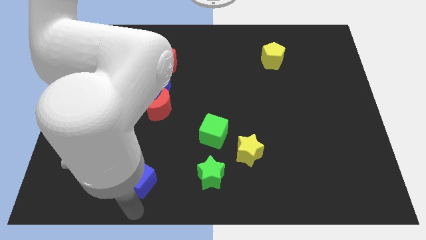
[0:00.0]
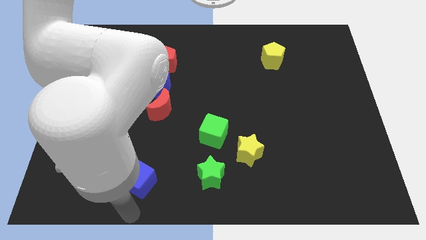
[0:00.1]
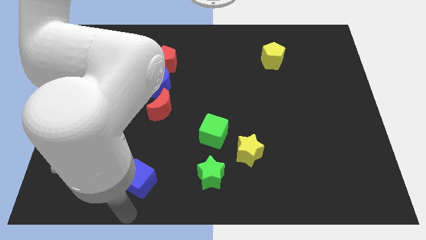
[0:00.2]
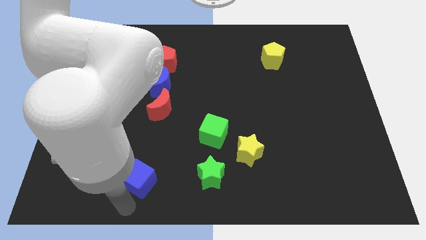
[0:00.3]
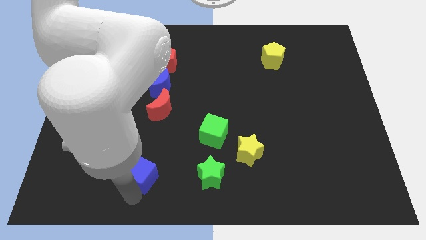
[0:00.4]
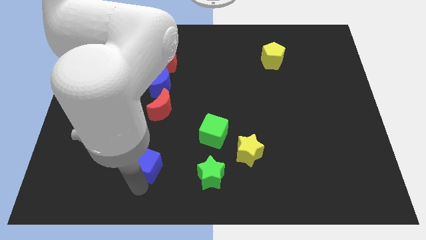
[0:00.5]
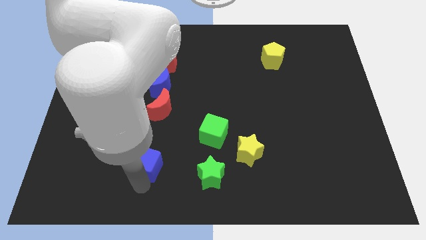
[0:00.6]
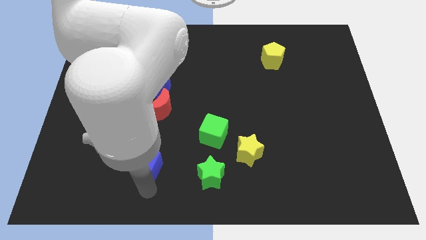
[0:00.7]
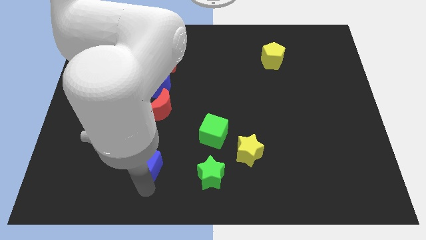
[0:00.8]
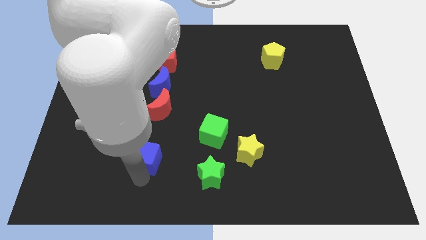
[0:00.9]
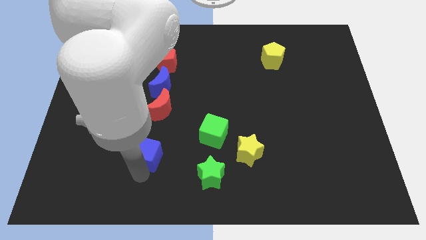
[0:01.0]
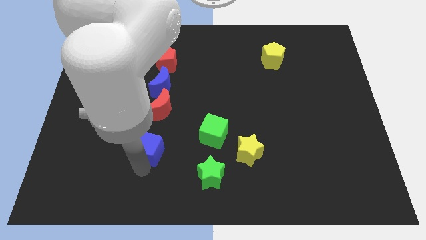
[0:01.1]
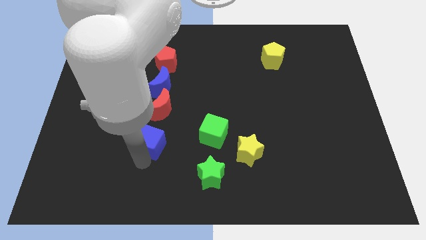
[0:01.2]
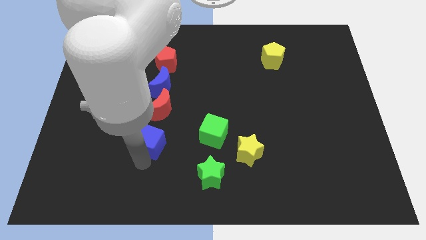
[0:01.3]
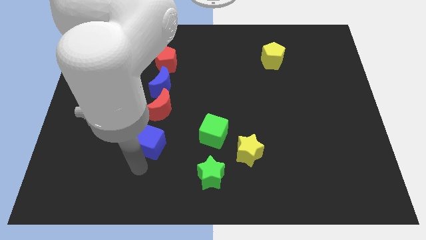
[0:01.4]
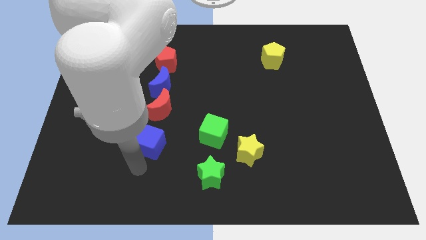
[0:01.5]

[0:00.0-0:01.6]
move the blue cube below the red moon

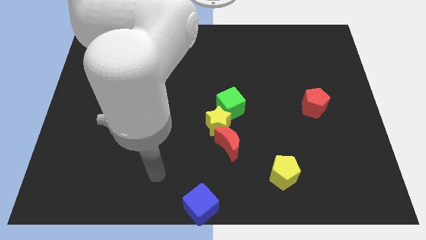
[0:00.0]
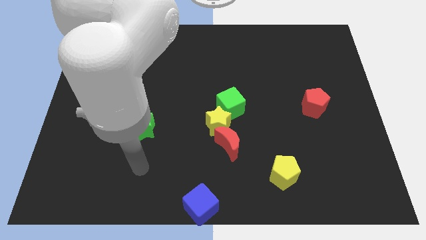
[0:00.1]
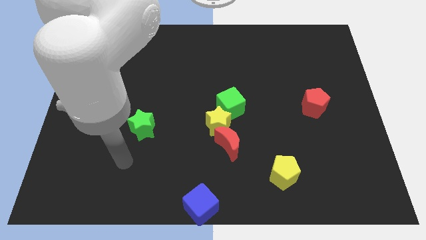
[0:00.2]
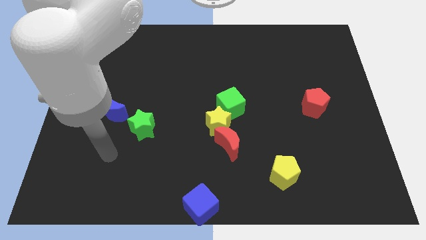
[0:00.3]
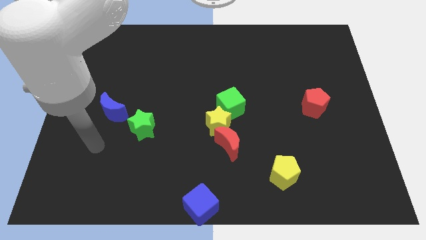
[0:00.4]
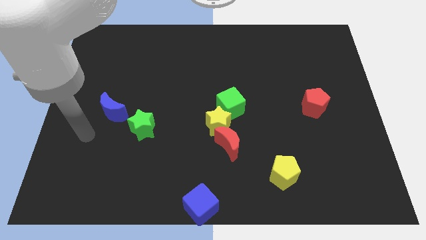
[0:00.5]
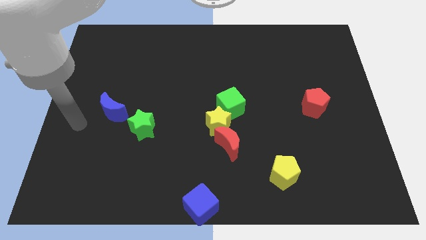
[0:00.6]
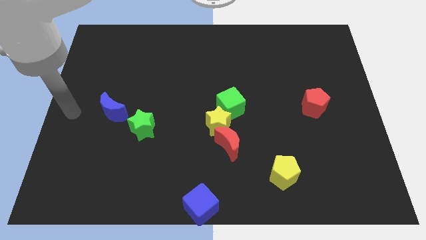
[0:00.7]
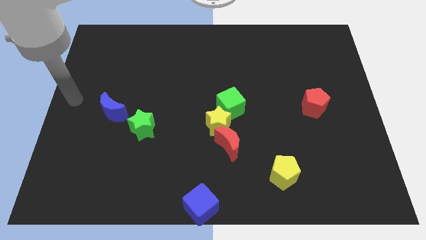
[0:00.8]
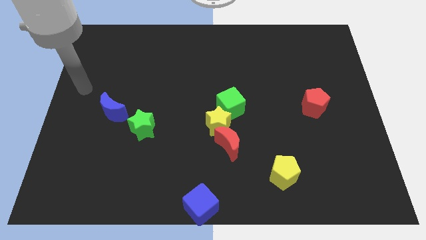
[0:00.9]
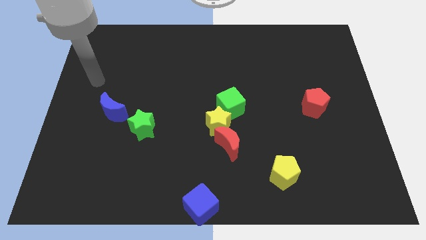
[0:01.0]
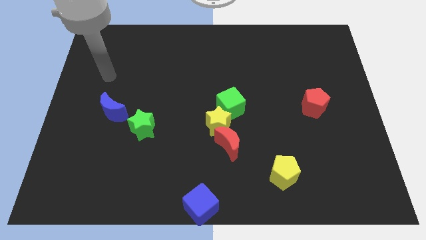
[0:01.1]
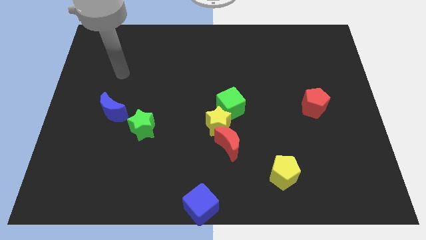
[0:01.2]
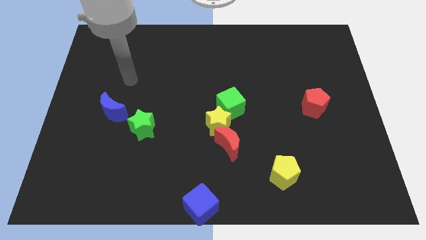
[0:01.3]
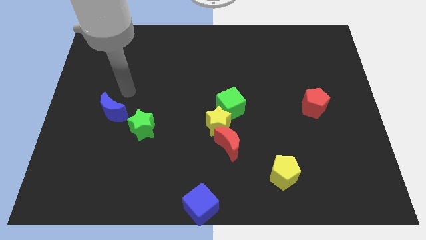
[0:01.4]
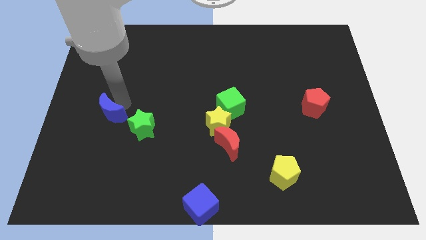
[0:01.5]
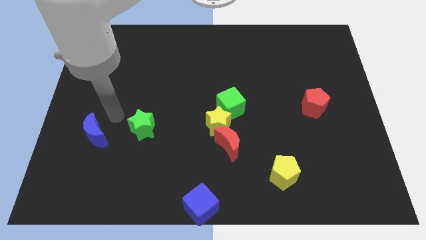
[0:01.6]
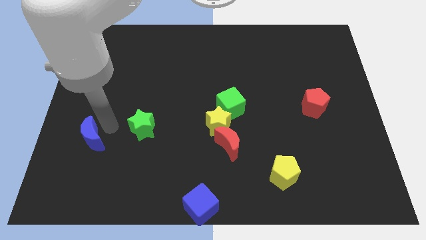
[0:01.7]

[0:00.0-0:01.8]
push the blue crescent towards the left of the board

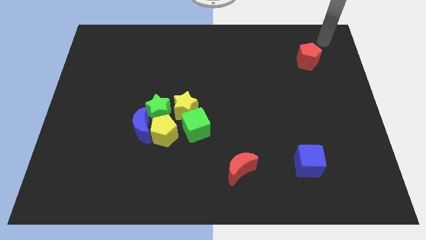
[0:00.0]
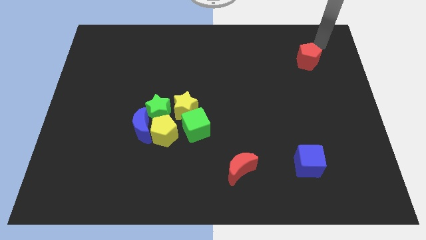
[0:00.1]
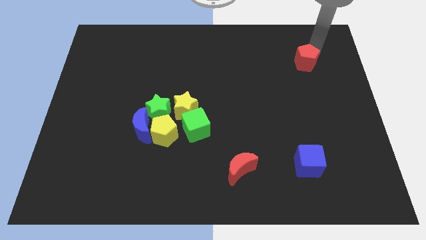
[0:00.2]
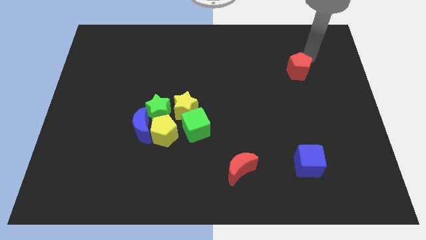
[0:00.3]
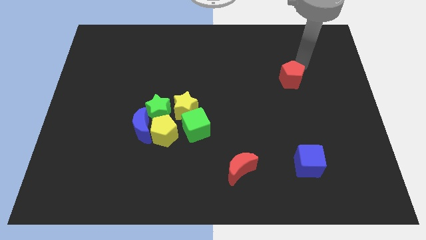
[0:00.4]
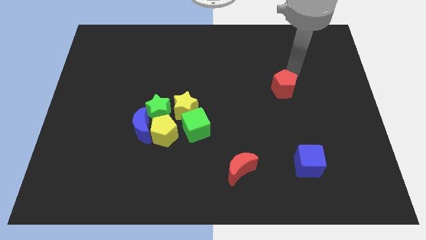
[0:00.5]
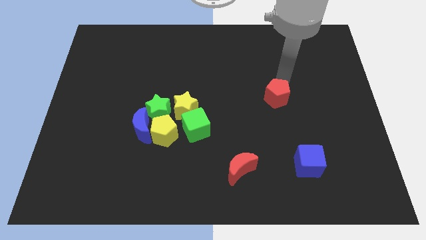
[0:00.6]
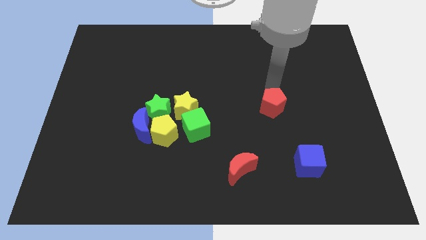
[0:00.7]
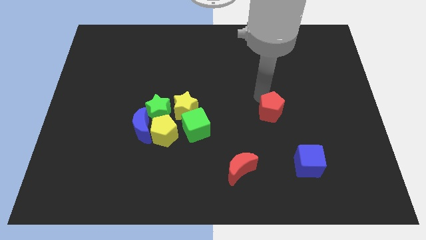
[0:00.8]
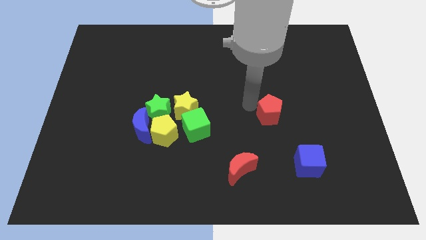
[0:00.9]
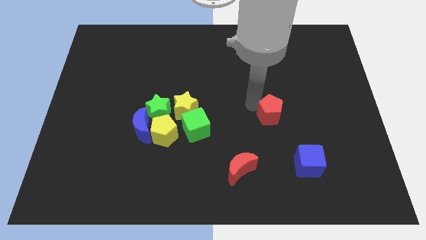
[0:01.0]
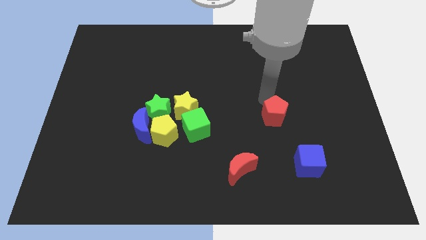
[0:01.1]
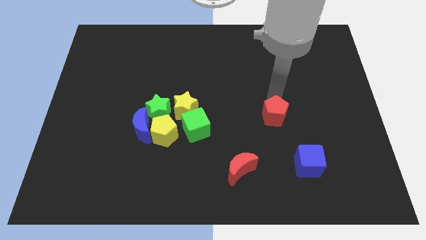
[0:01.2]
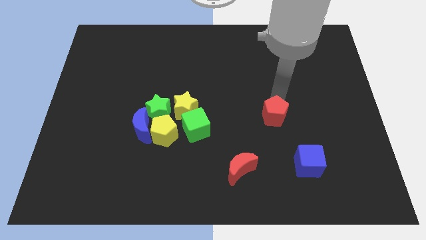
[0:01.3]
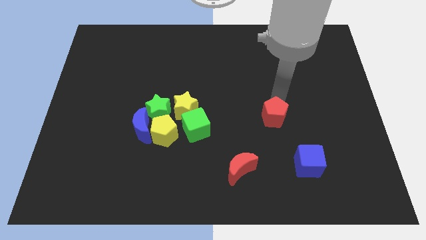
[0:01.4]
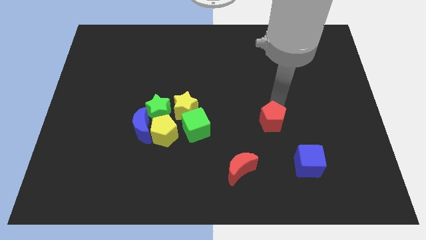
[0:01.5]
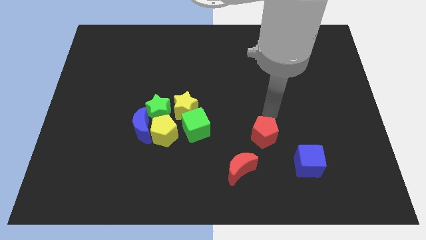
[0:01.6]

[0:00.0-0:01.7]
move the red pentagon to the right of the green cube

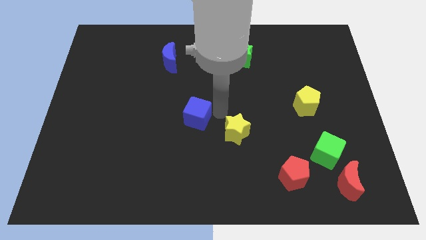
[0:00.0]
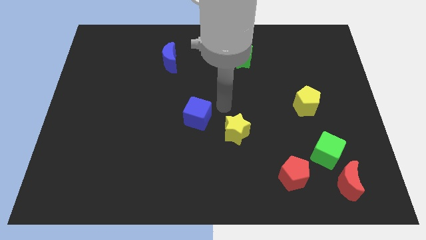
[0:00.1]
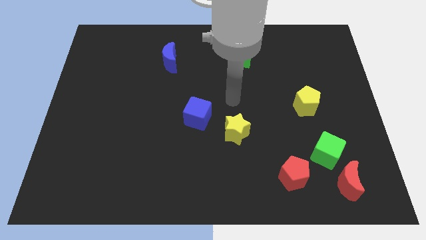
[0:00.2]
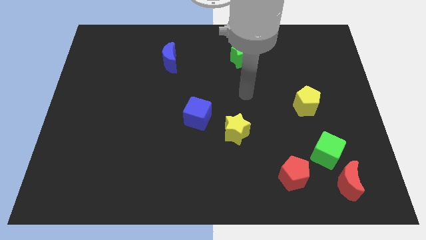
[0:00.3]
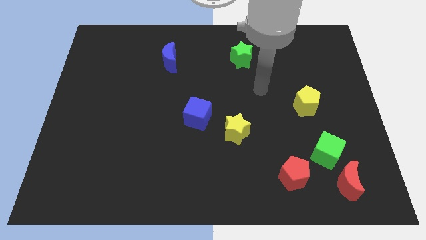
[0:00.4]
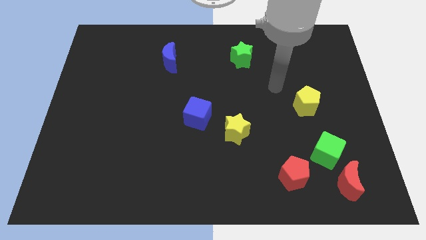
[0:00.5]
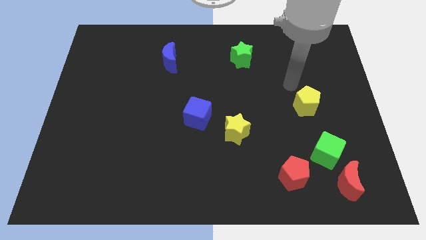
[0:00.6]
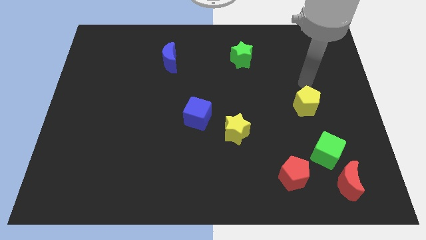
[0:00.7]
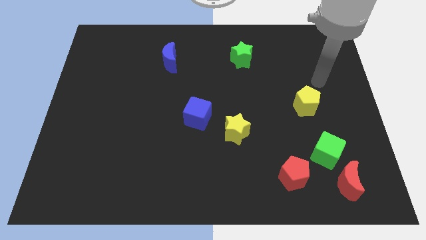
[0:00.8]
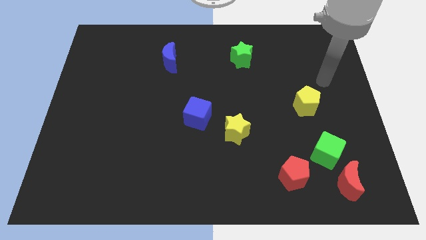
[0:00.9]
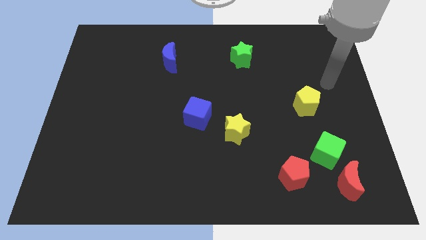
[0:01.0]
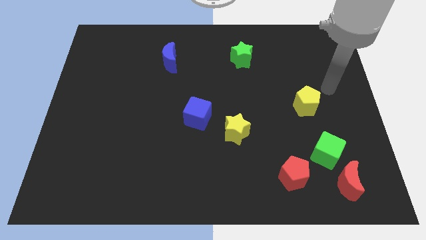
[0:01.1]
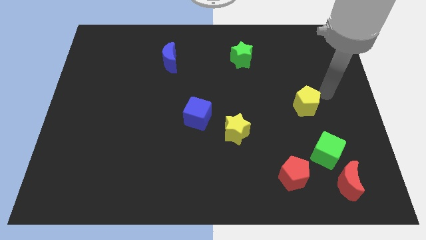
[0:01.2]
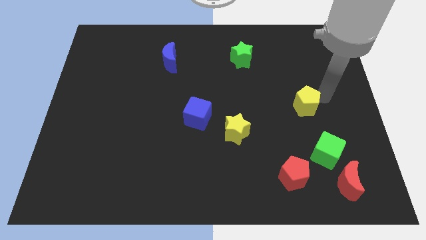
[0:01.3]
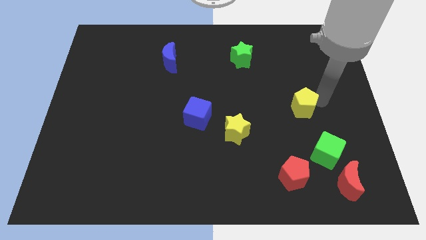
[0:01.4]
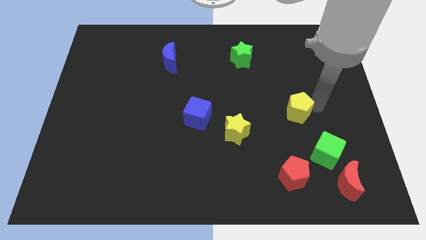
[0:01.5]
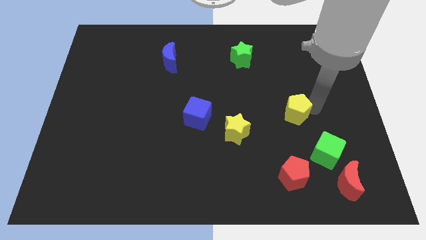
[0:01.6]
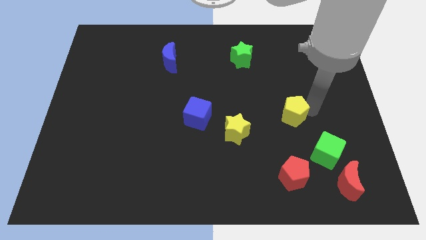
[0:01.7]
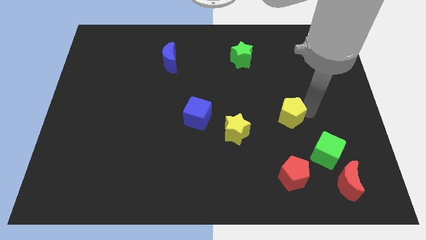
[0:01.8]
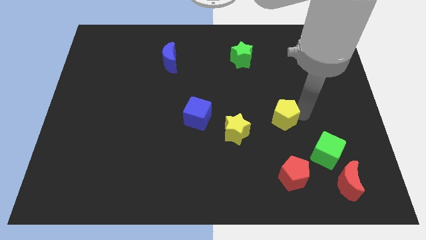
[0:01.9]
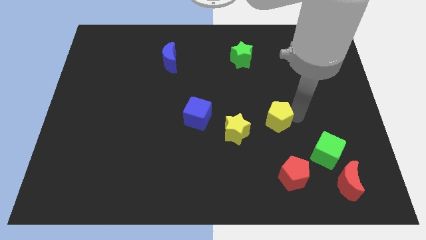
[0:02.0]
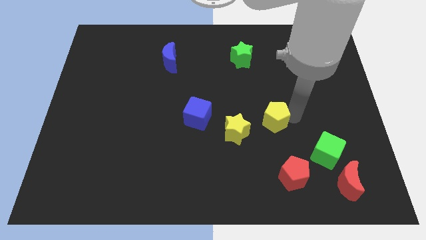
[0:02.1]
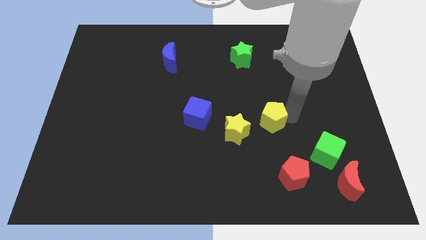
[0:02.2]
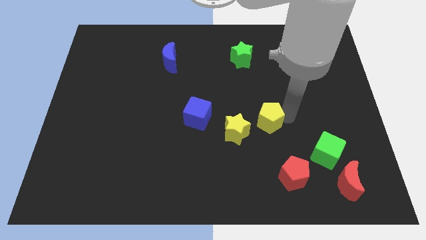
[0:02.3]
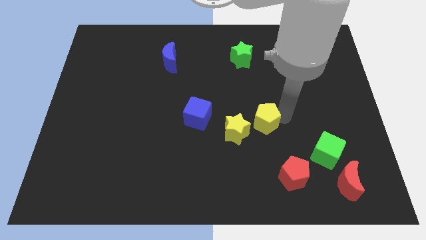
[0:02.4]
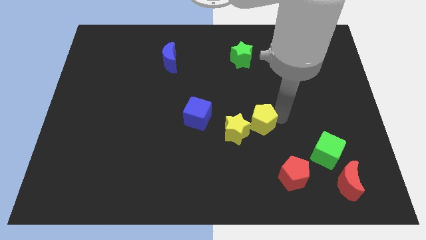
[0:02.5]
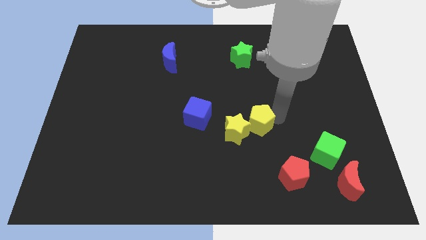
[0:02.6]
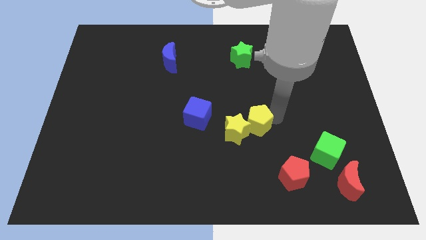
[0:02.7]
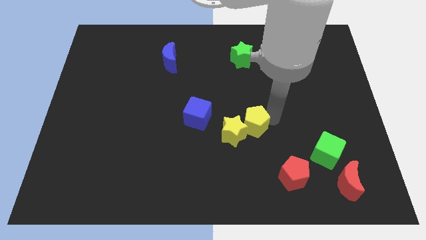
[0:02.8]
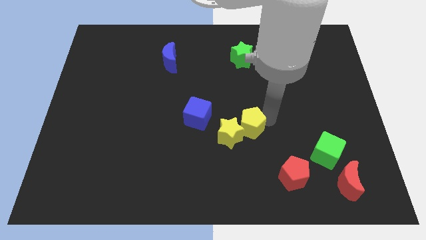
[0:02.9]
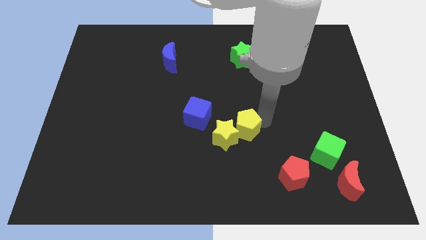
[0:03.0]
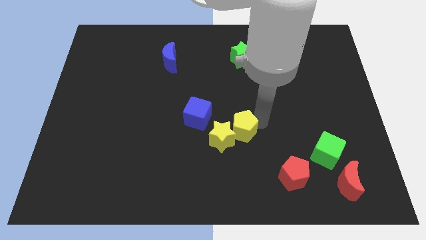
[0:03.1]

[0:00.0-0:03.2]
push the yellow pentagon into the yellow star

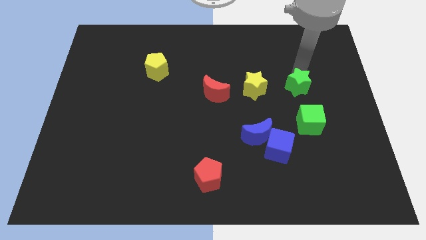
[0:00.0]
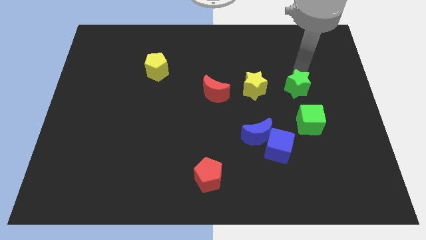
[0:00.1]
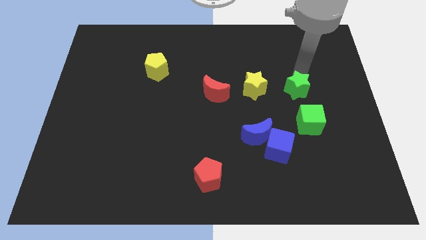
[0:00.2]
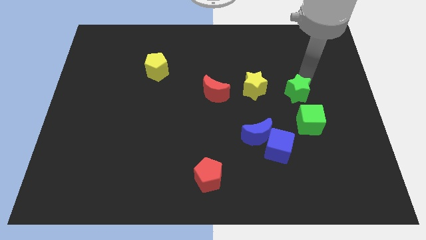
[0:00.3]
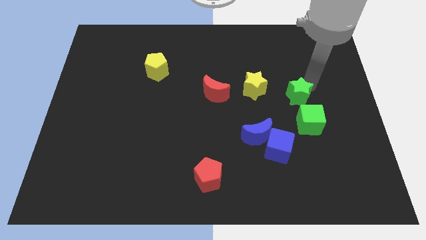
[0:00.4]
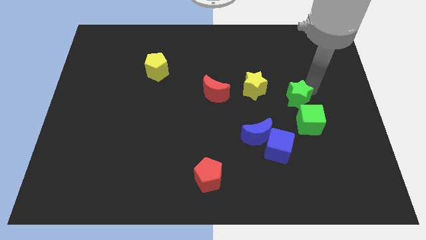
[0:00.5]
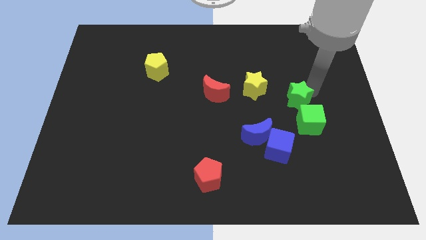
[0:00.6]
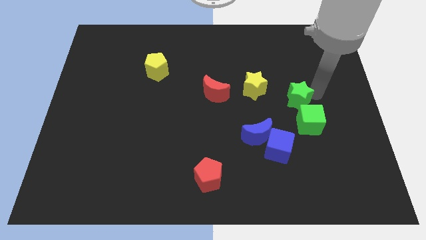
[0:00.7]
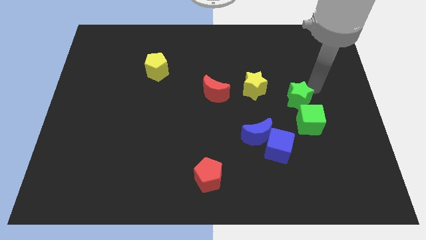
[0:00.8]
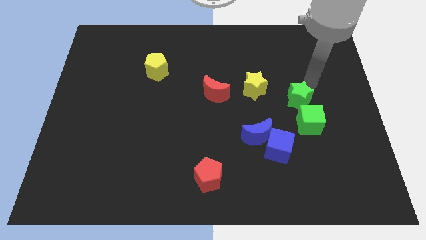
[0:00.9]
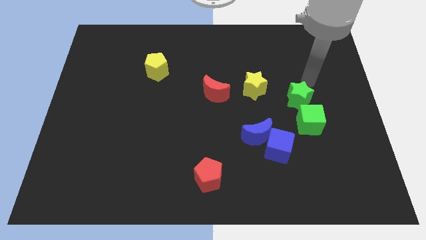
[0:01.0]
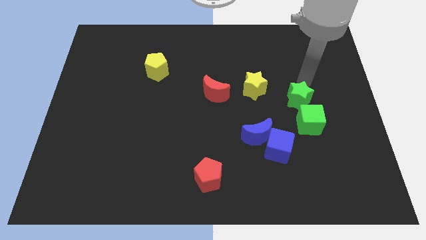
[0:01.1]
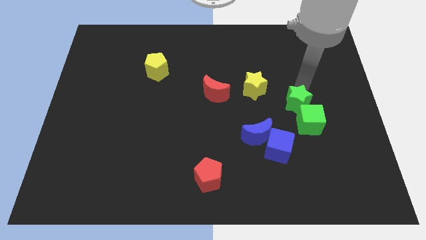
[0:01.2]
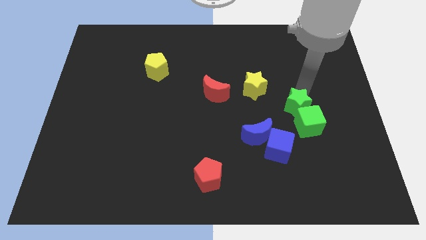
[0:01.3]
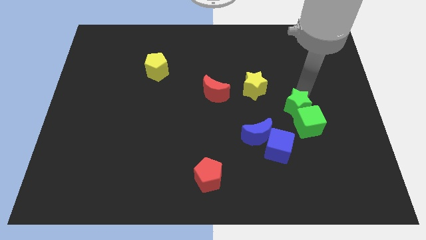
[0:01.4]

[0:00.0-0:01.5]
move green star into green cube
